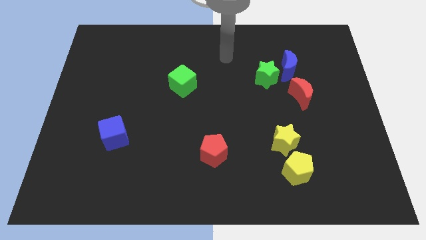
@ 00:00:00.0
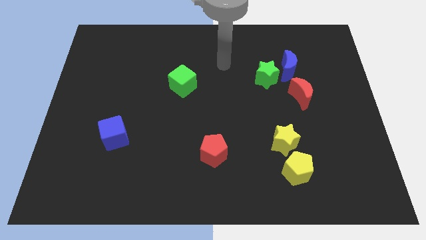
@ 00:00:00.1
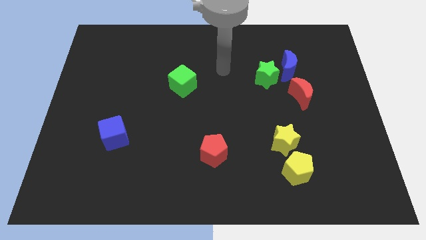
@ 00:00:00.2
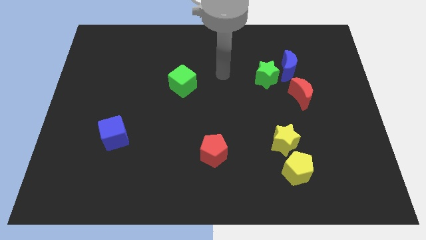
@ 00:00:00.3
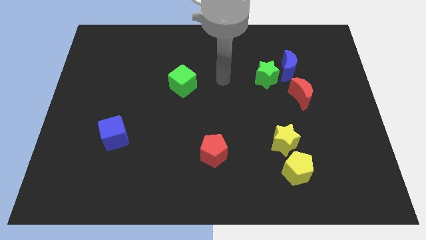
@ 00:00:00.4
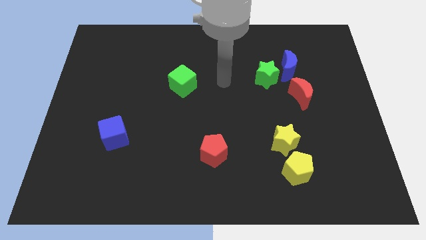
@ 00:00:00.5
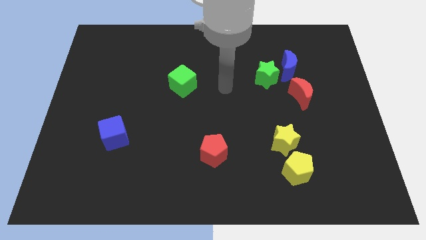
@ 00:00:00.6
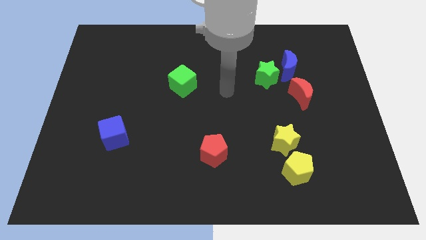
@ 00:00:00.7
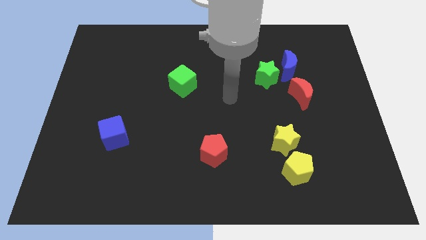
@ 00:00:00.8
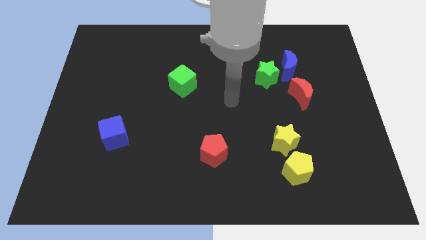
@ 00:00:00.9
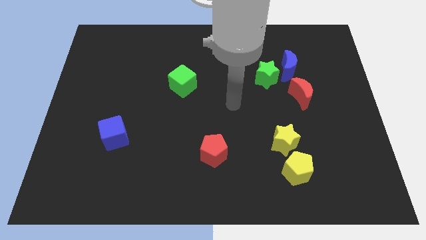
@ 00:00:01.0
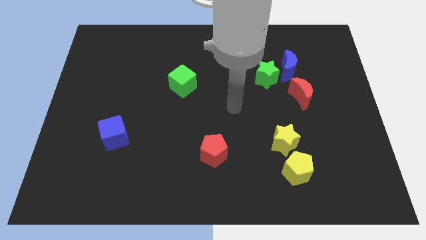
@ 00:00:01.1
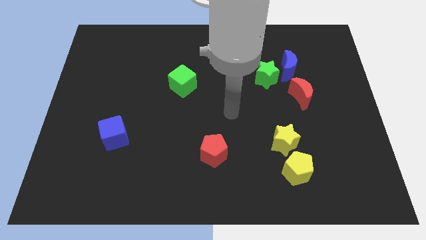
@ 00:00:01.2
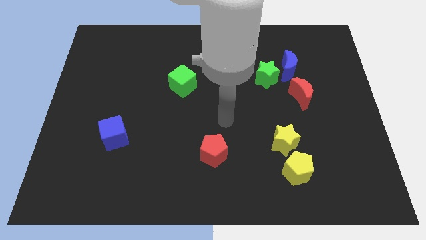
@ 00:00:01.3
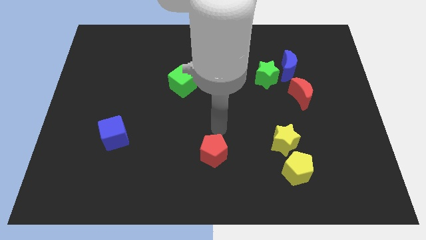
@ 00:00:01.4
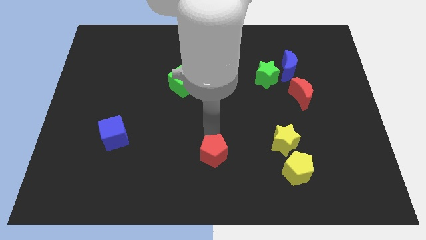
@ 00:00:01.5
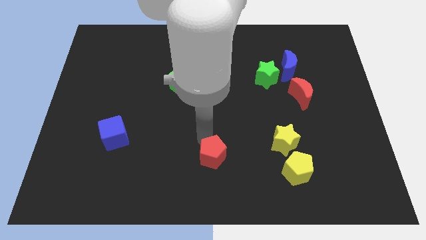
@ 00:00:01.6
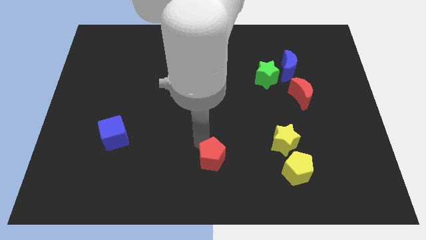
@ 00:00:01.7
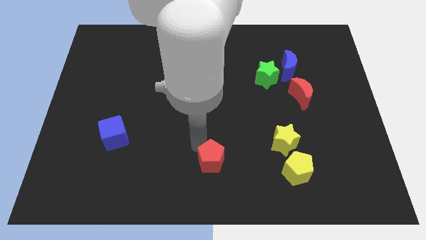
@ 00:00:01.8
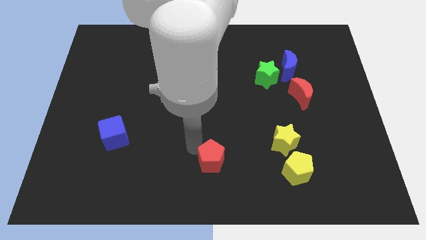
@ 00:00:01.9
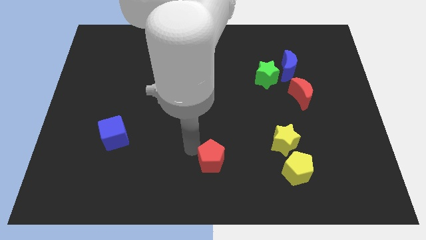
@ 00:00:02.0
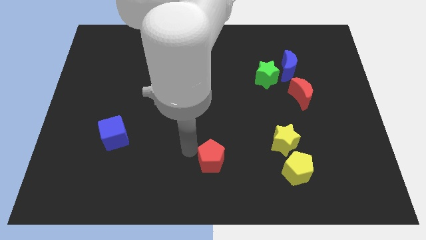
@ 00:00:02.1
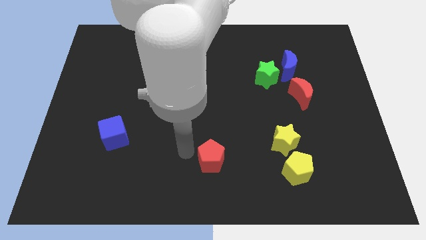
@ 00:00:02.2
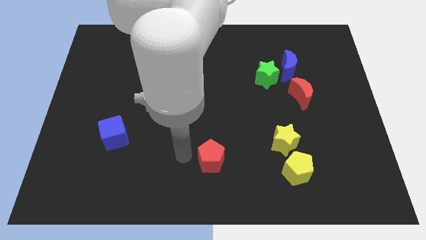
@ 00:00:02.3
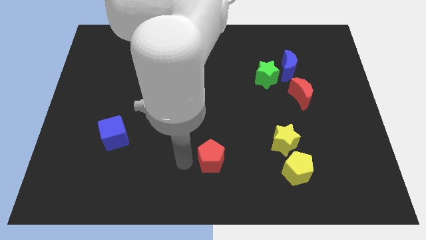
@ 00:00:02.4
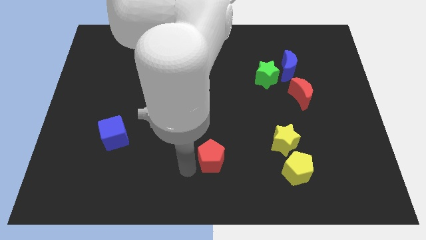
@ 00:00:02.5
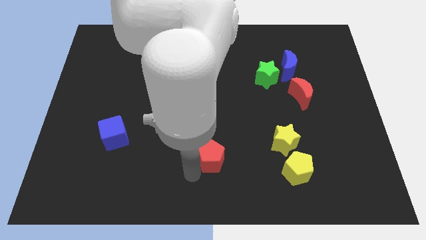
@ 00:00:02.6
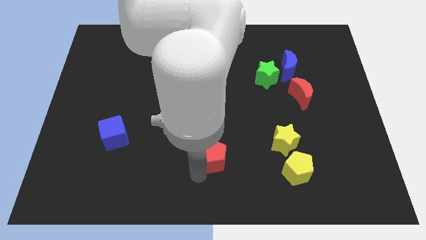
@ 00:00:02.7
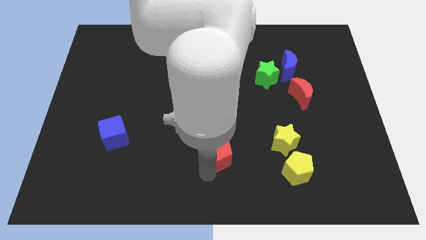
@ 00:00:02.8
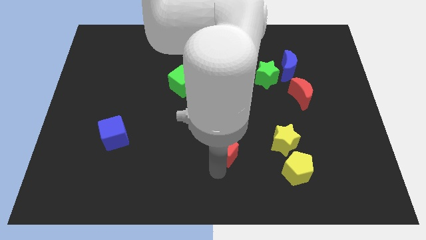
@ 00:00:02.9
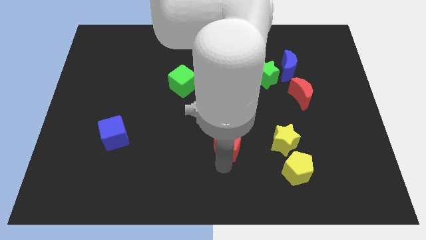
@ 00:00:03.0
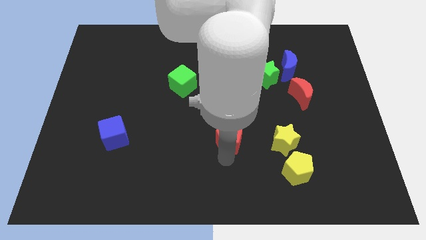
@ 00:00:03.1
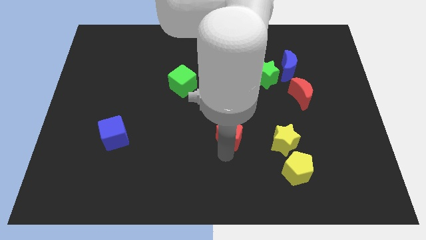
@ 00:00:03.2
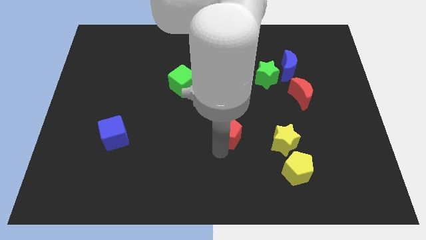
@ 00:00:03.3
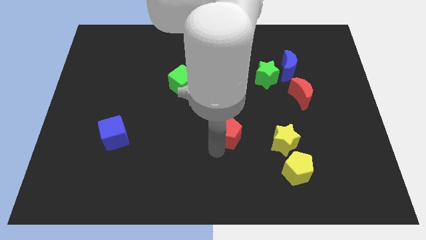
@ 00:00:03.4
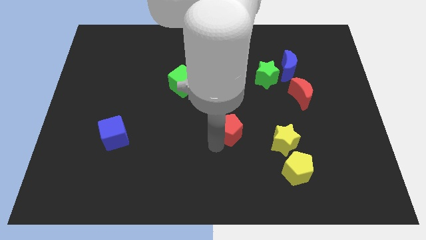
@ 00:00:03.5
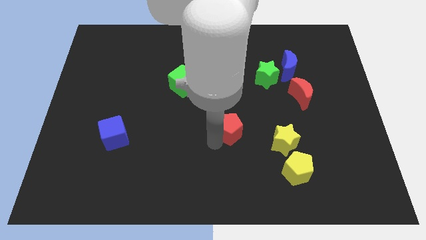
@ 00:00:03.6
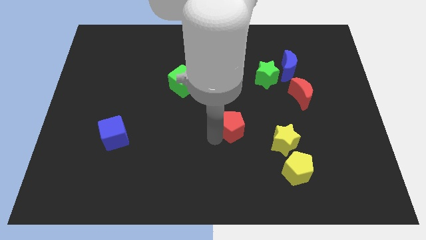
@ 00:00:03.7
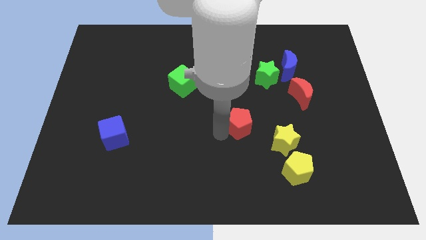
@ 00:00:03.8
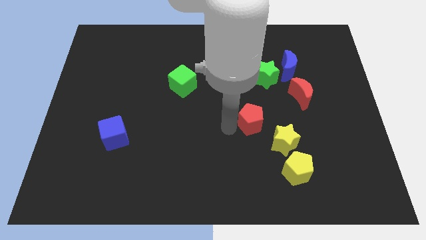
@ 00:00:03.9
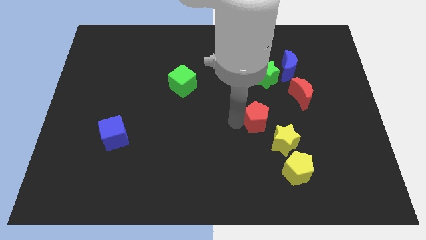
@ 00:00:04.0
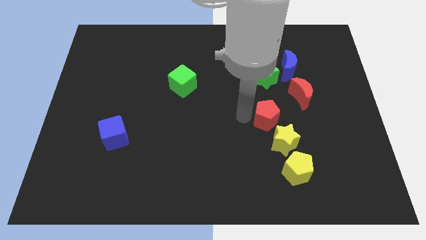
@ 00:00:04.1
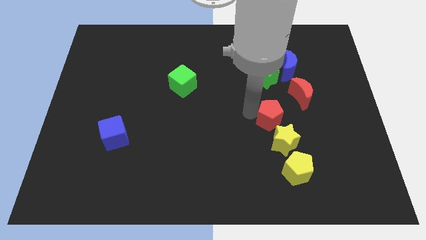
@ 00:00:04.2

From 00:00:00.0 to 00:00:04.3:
push the red pentagon towards the yellow star

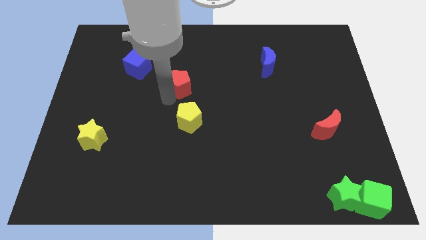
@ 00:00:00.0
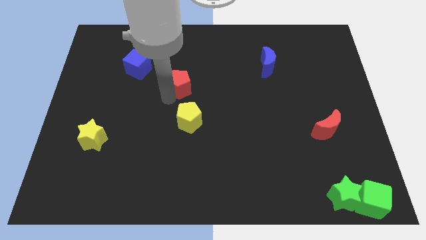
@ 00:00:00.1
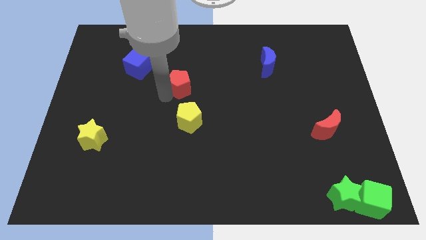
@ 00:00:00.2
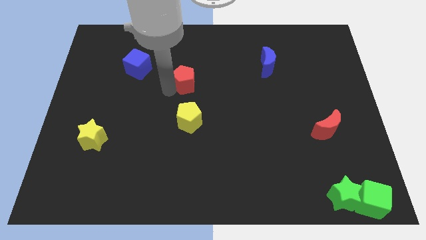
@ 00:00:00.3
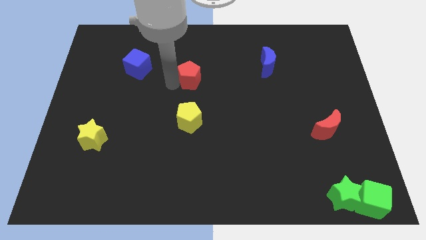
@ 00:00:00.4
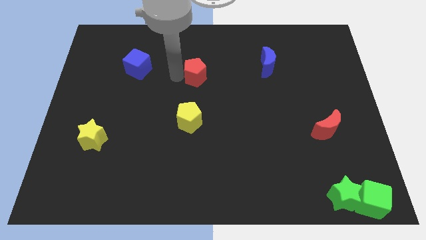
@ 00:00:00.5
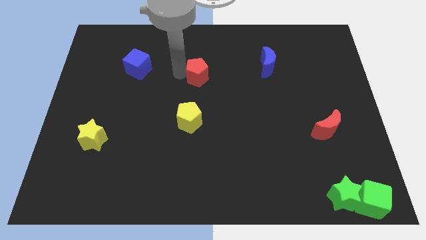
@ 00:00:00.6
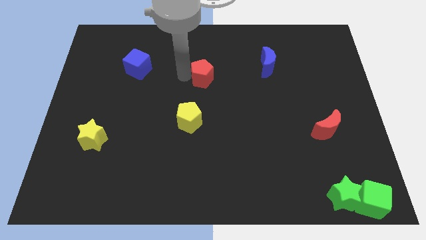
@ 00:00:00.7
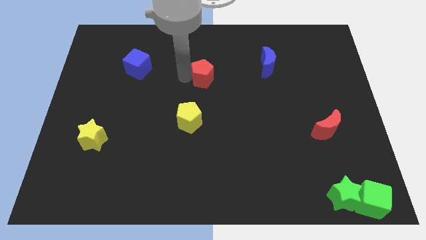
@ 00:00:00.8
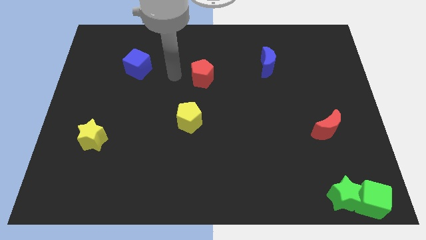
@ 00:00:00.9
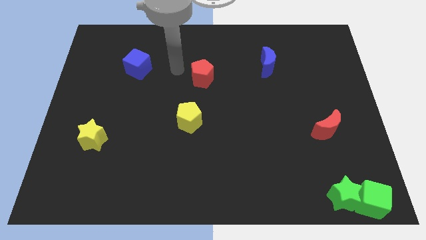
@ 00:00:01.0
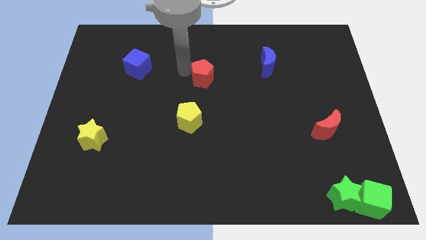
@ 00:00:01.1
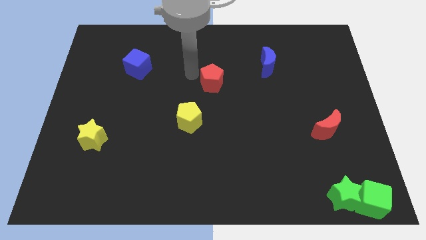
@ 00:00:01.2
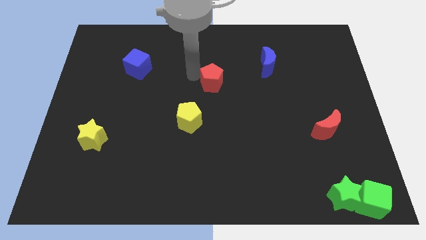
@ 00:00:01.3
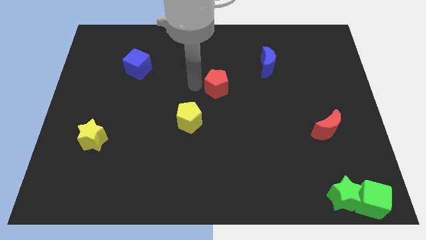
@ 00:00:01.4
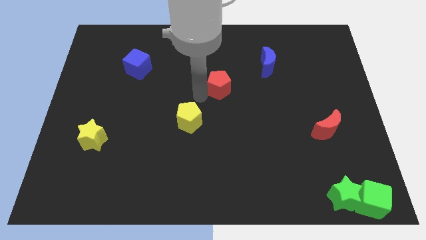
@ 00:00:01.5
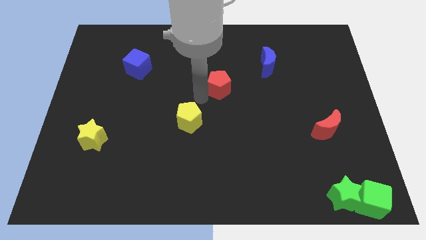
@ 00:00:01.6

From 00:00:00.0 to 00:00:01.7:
place the red pentagon diagonally to yellow pentagon

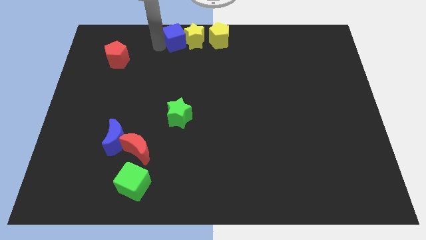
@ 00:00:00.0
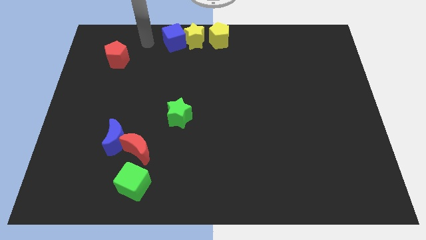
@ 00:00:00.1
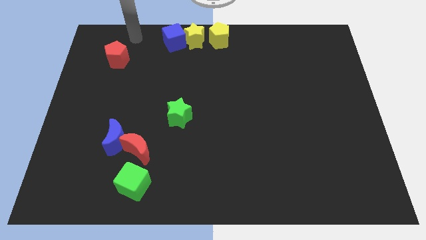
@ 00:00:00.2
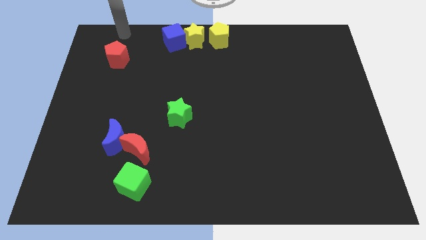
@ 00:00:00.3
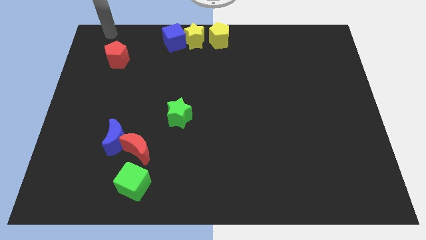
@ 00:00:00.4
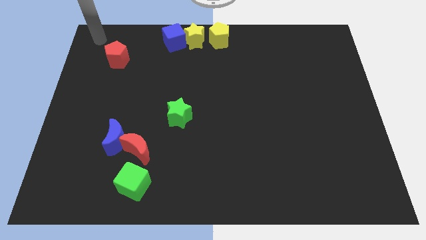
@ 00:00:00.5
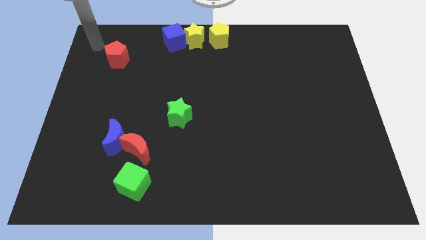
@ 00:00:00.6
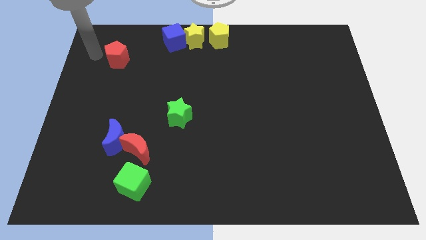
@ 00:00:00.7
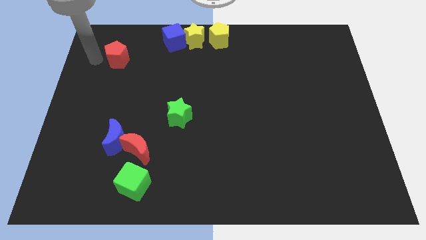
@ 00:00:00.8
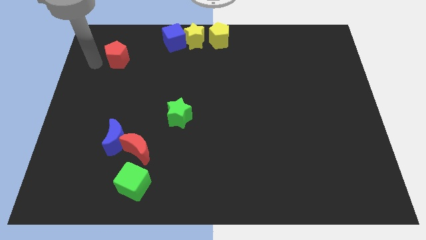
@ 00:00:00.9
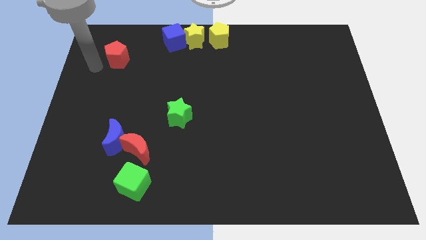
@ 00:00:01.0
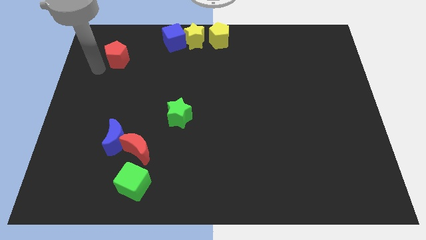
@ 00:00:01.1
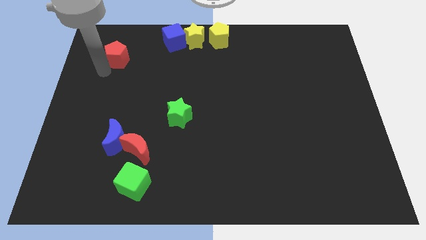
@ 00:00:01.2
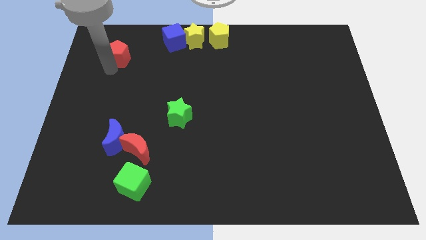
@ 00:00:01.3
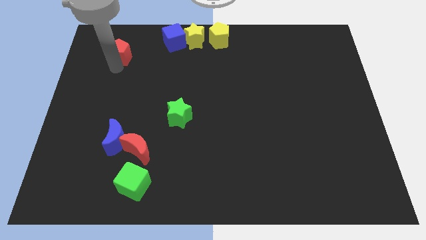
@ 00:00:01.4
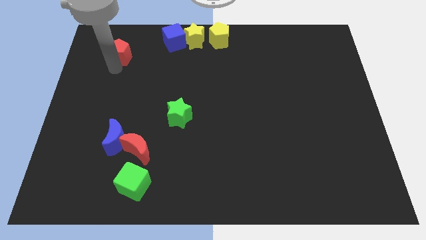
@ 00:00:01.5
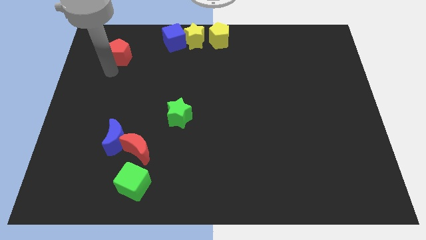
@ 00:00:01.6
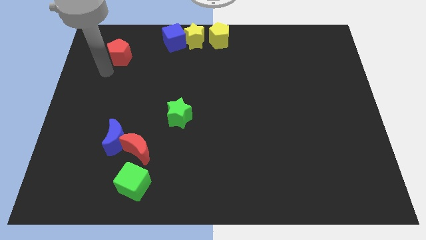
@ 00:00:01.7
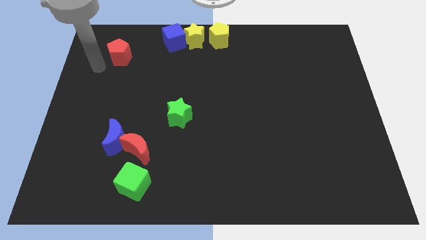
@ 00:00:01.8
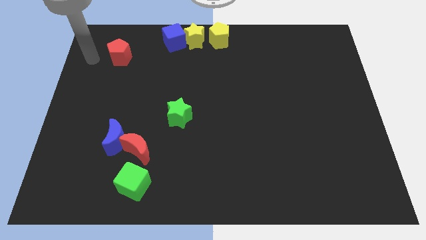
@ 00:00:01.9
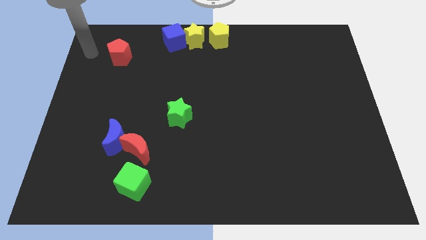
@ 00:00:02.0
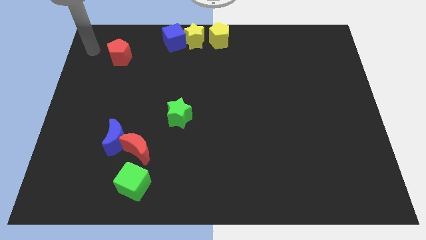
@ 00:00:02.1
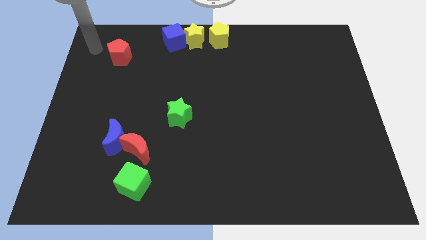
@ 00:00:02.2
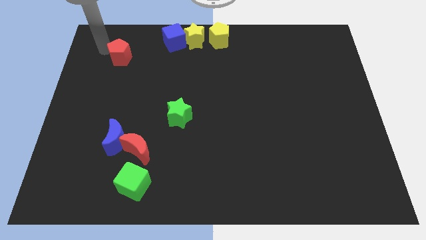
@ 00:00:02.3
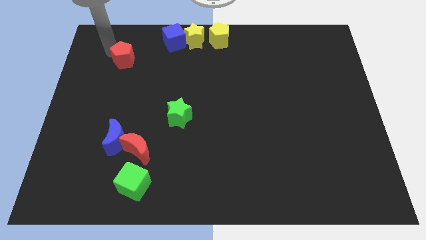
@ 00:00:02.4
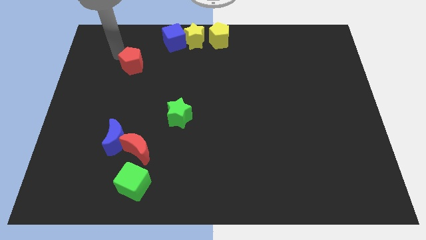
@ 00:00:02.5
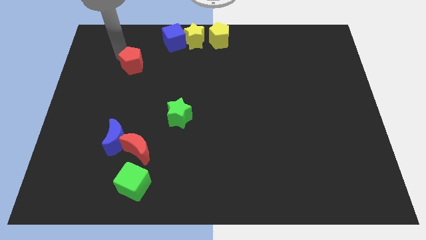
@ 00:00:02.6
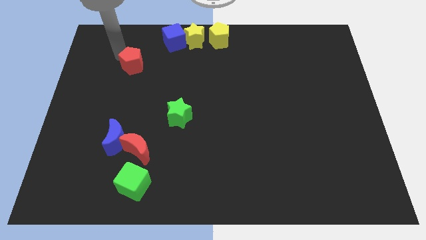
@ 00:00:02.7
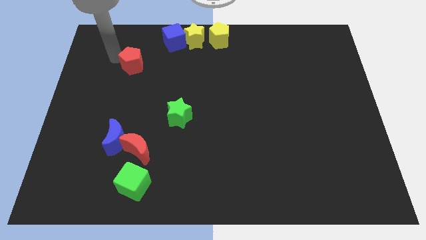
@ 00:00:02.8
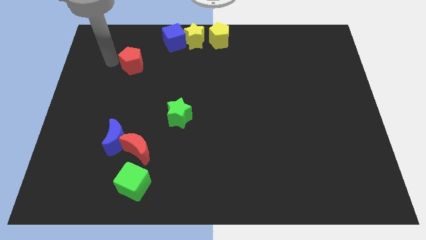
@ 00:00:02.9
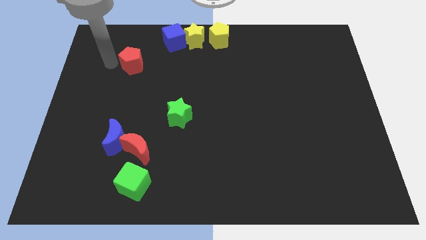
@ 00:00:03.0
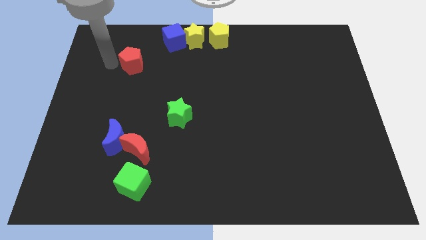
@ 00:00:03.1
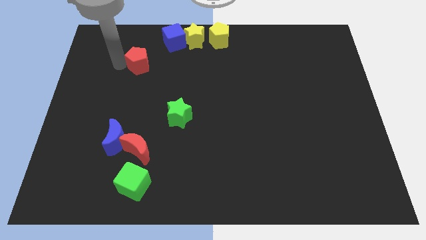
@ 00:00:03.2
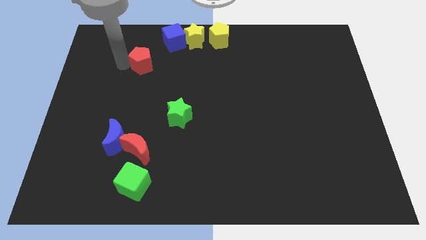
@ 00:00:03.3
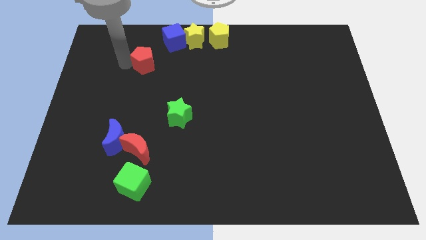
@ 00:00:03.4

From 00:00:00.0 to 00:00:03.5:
place the red pentagon diagonally top left to the green star
